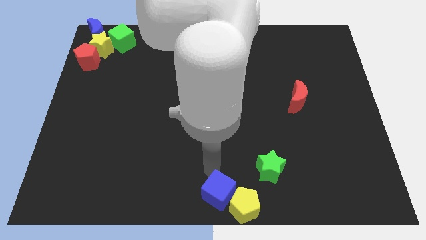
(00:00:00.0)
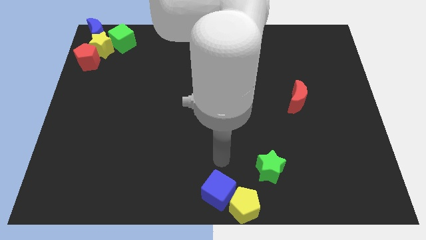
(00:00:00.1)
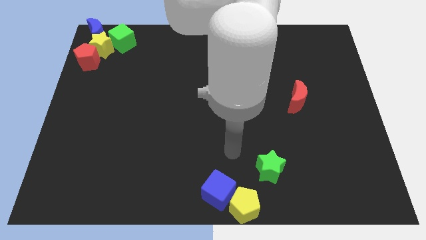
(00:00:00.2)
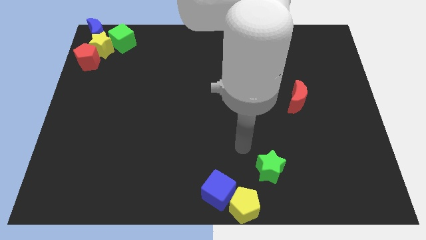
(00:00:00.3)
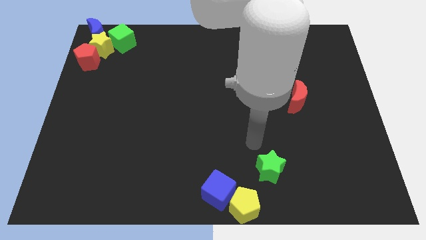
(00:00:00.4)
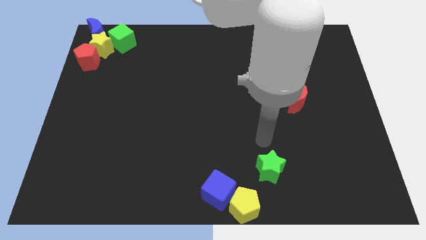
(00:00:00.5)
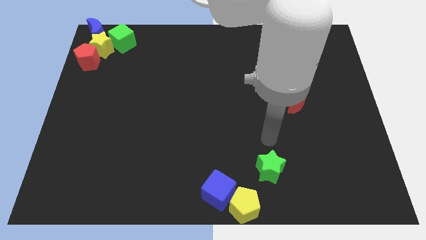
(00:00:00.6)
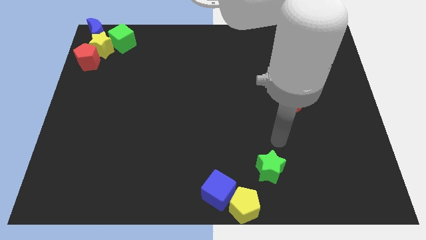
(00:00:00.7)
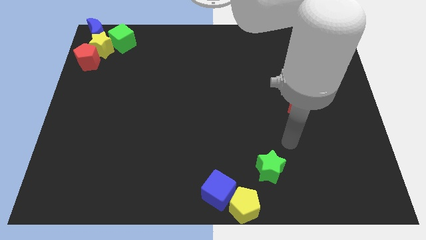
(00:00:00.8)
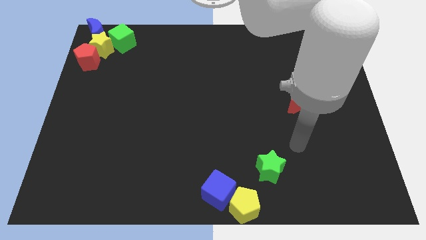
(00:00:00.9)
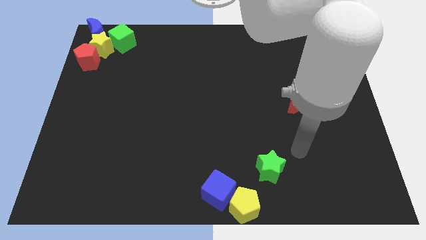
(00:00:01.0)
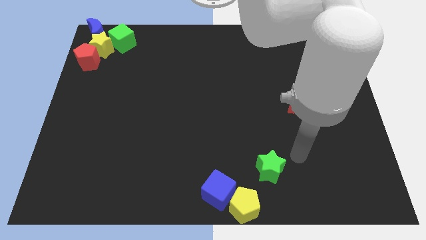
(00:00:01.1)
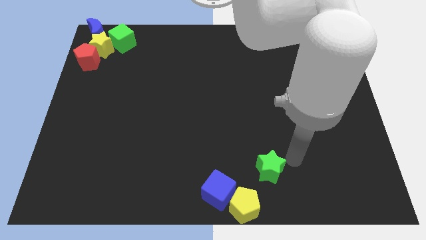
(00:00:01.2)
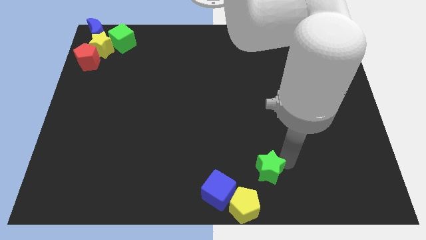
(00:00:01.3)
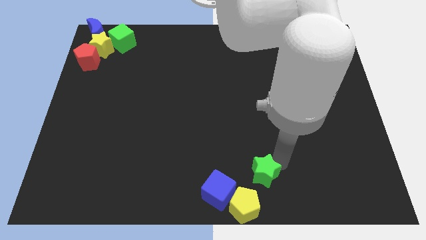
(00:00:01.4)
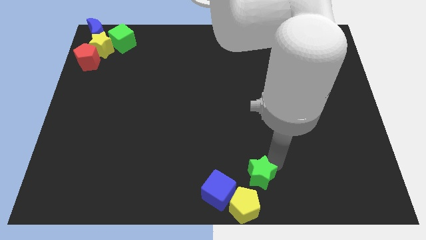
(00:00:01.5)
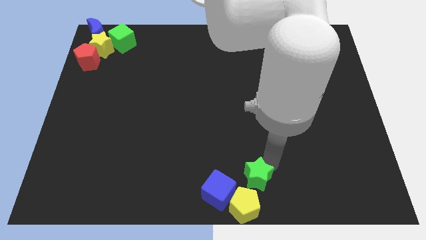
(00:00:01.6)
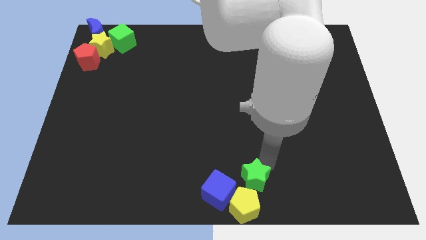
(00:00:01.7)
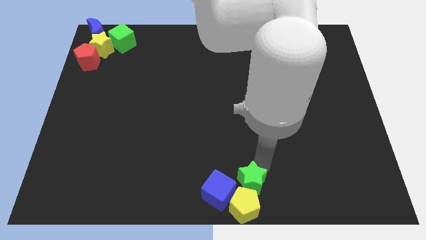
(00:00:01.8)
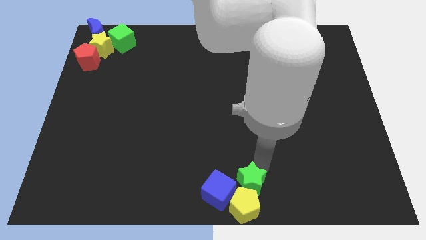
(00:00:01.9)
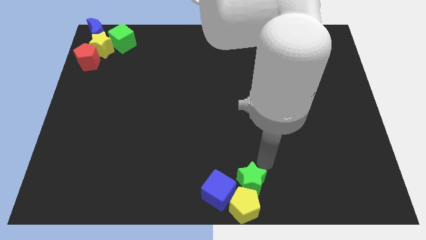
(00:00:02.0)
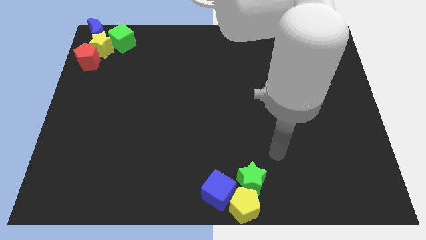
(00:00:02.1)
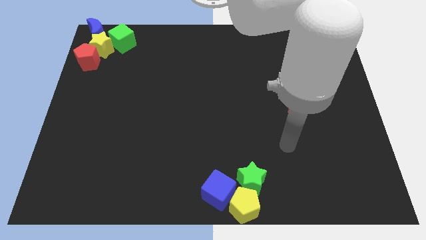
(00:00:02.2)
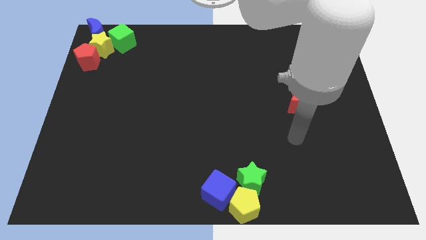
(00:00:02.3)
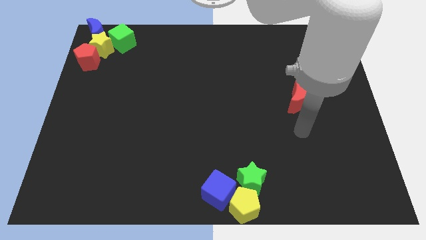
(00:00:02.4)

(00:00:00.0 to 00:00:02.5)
place the green star at the top of yellow pentagon

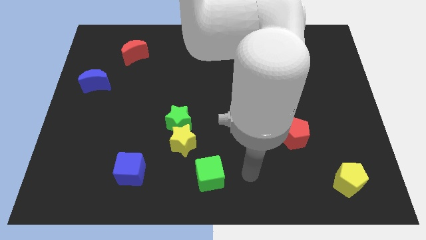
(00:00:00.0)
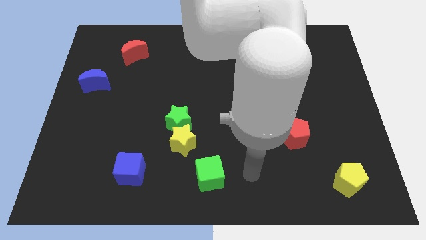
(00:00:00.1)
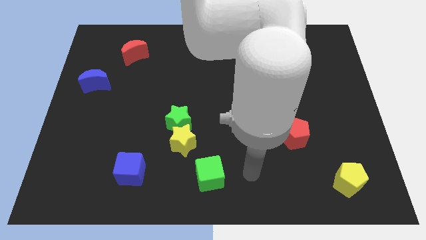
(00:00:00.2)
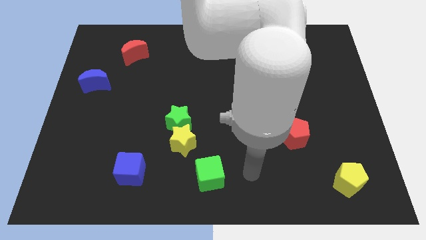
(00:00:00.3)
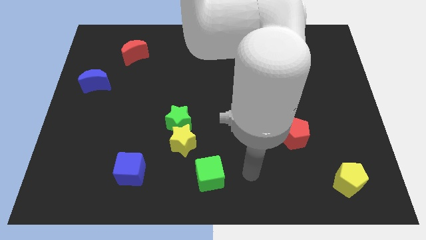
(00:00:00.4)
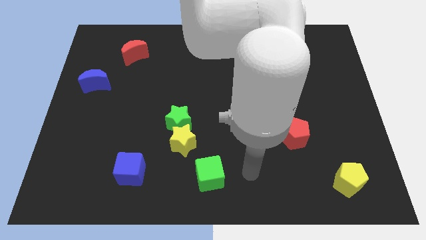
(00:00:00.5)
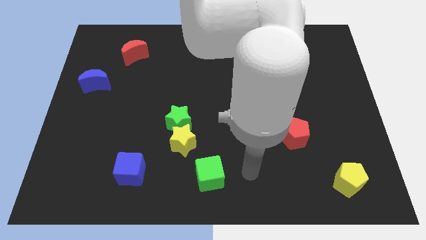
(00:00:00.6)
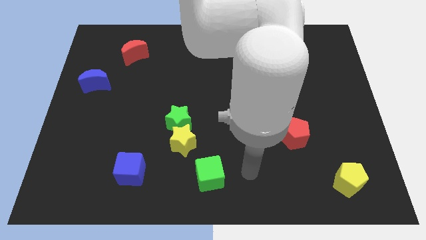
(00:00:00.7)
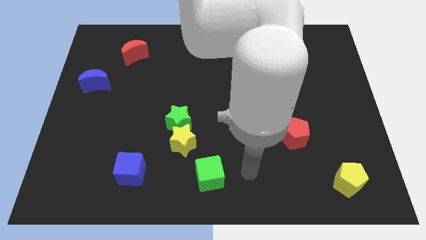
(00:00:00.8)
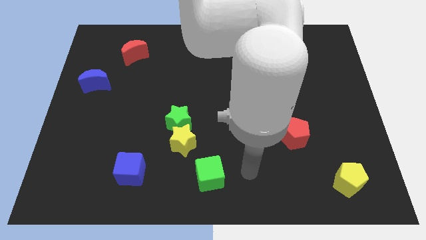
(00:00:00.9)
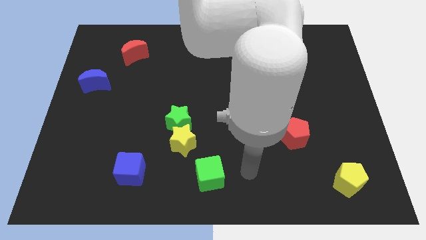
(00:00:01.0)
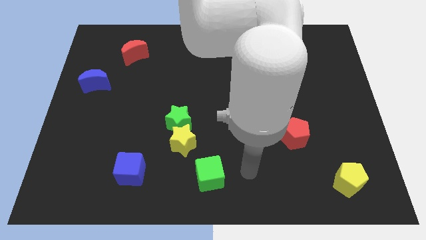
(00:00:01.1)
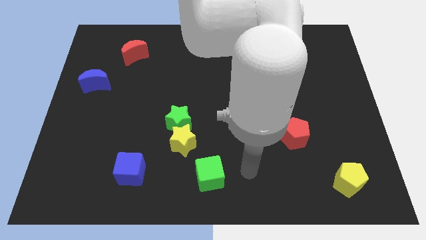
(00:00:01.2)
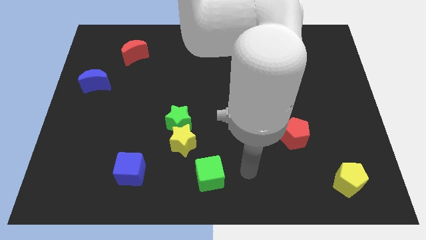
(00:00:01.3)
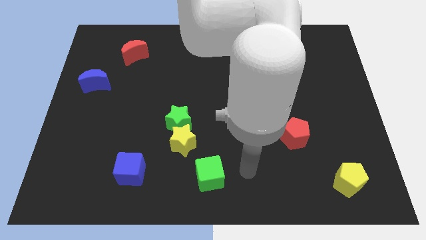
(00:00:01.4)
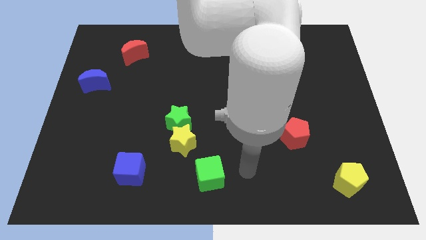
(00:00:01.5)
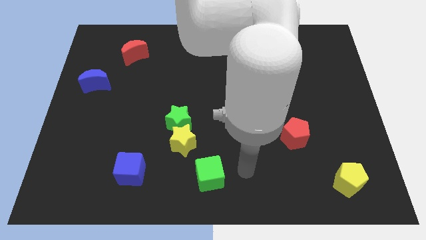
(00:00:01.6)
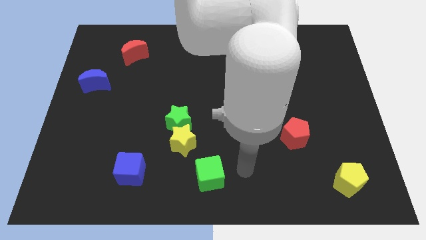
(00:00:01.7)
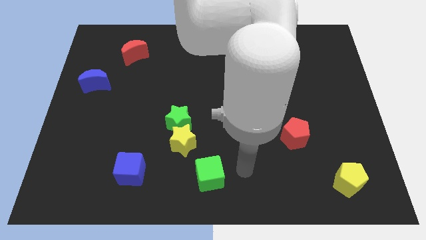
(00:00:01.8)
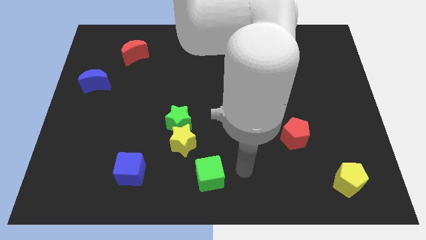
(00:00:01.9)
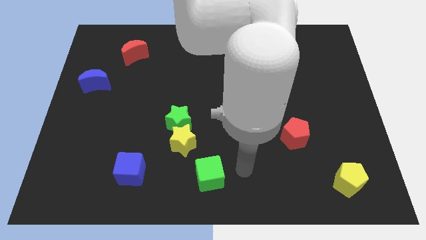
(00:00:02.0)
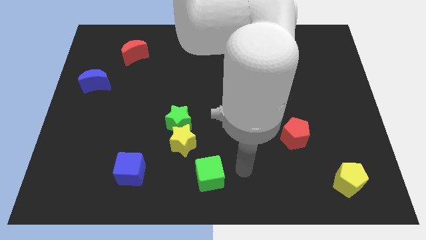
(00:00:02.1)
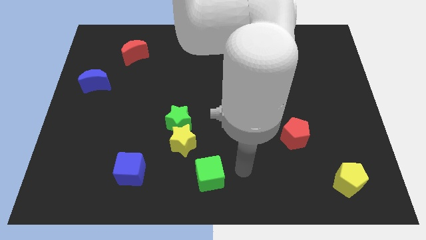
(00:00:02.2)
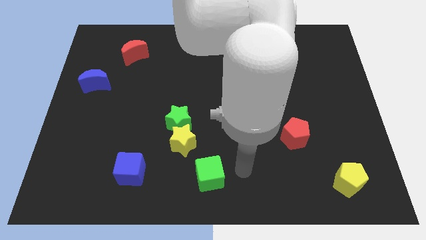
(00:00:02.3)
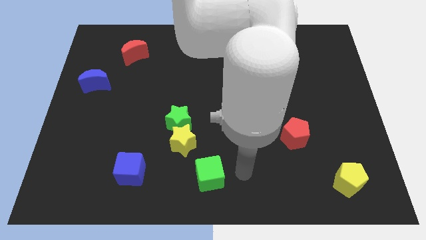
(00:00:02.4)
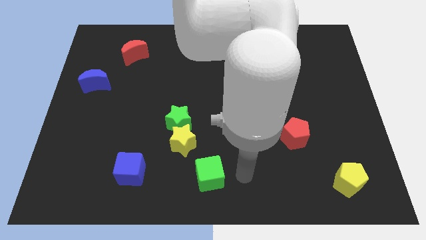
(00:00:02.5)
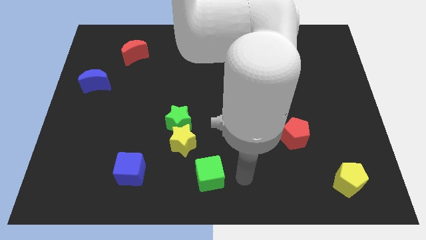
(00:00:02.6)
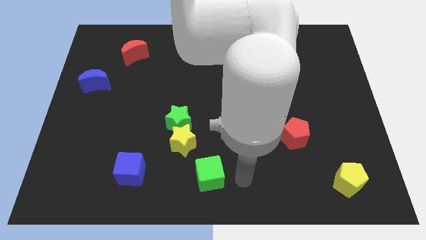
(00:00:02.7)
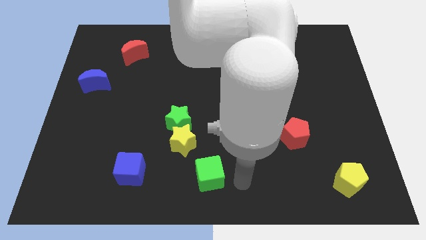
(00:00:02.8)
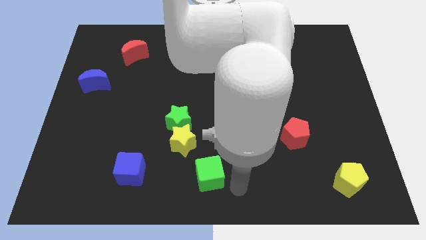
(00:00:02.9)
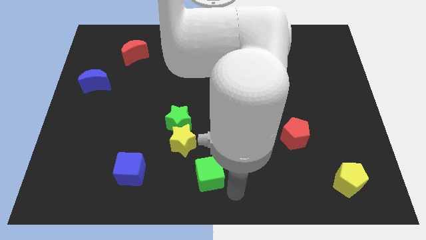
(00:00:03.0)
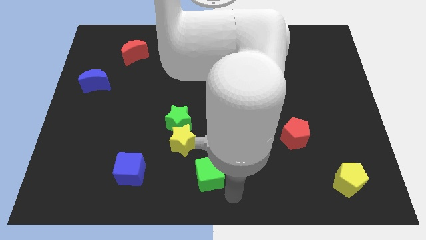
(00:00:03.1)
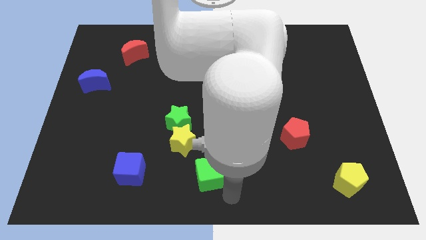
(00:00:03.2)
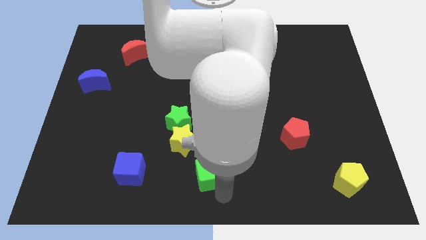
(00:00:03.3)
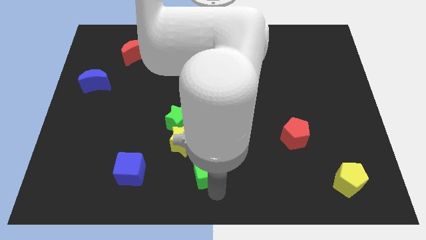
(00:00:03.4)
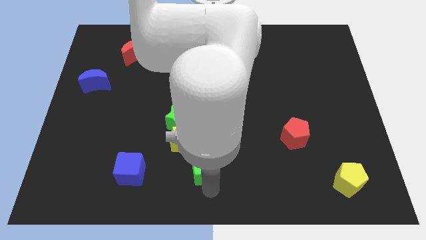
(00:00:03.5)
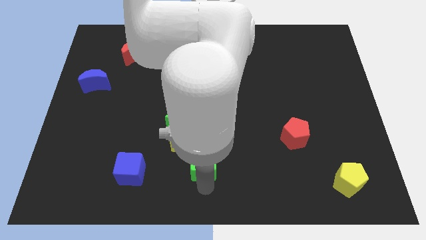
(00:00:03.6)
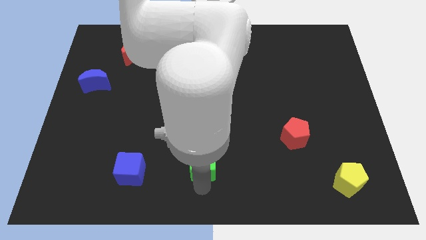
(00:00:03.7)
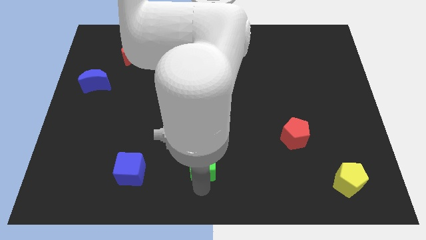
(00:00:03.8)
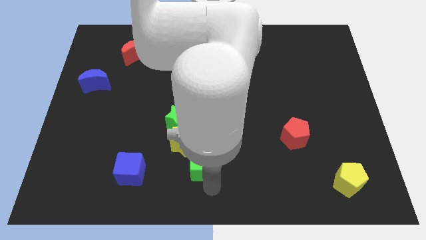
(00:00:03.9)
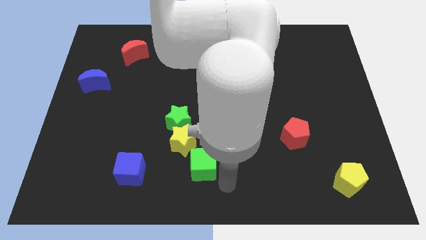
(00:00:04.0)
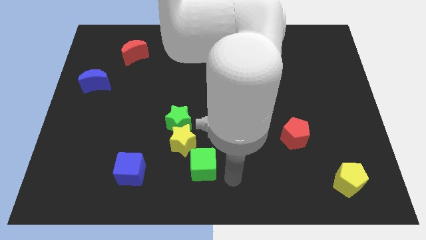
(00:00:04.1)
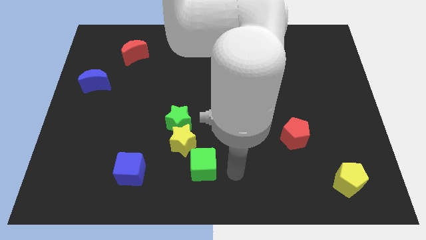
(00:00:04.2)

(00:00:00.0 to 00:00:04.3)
move the arm vertically below the green cube

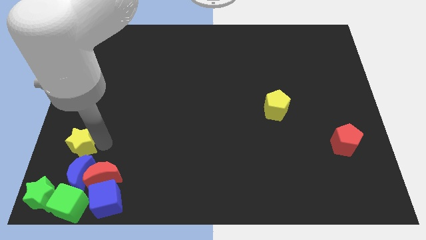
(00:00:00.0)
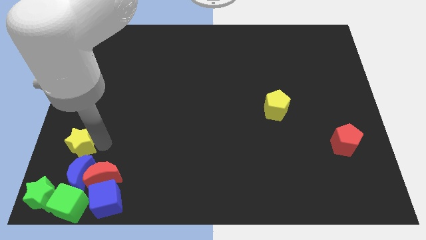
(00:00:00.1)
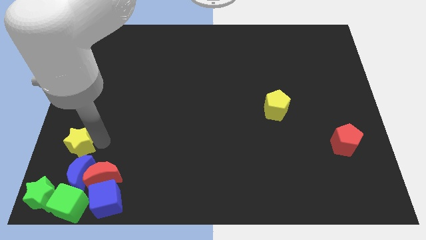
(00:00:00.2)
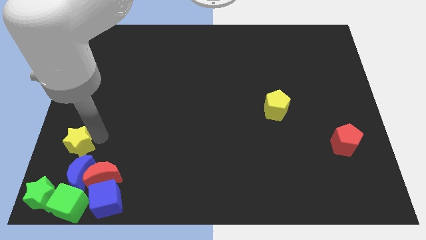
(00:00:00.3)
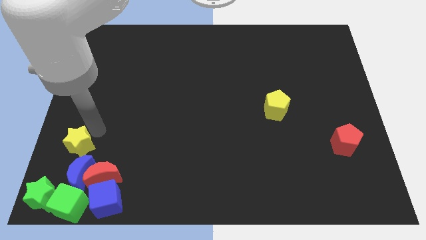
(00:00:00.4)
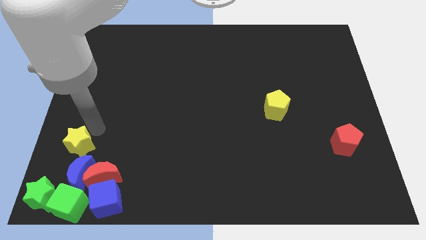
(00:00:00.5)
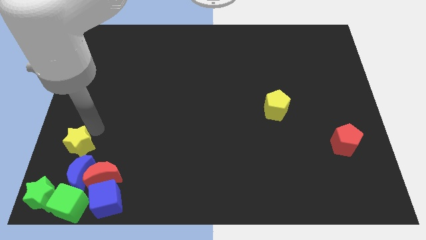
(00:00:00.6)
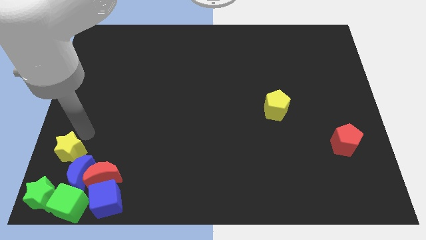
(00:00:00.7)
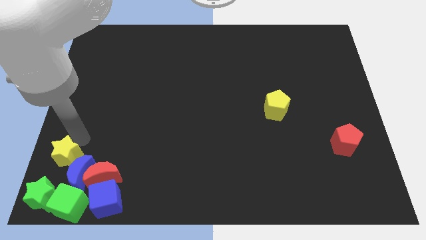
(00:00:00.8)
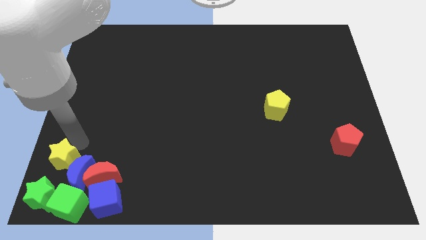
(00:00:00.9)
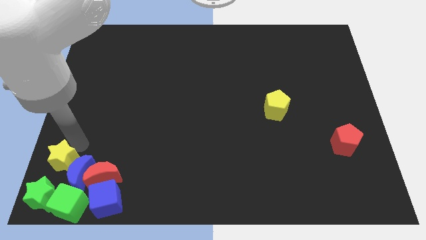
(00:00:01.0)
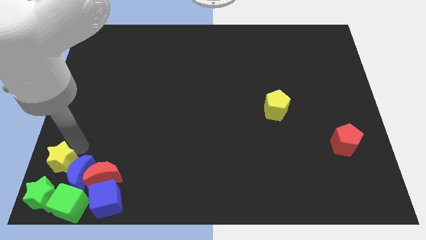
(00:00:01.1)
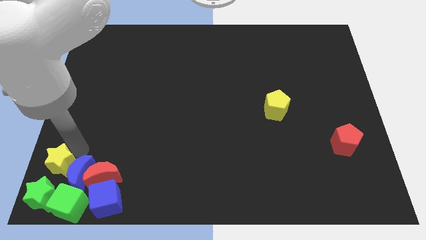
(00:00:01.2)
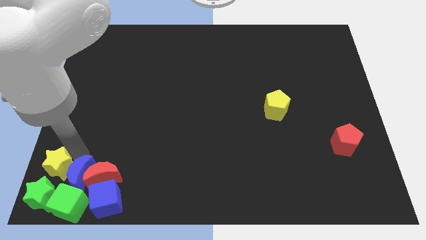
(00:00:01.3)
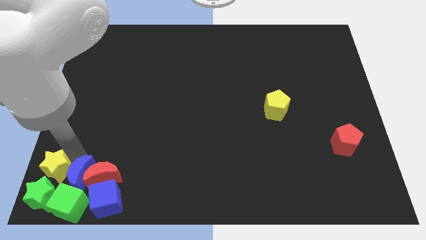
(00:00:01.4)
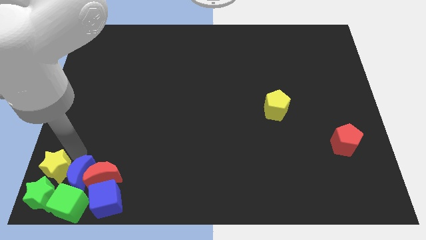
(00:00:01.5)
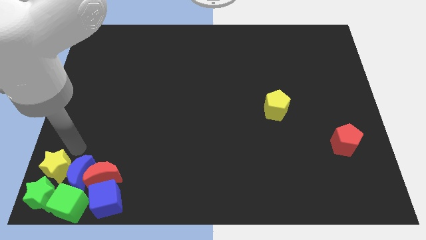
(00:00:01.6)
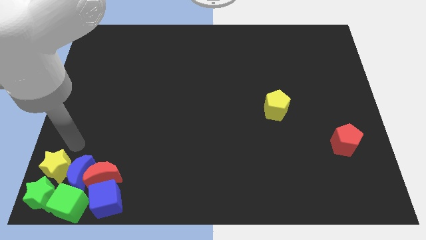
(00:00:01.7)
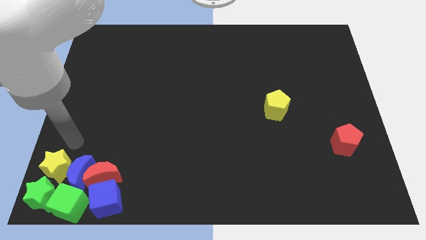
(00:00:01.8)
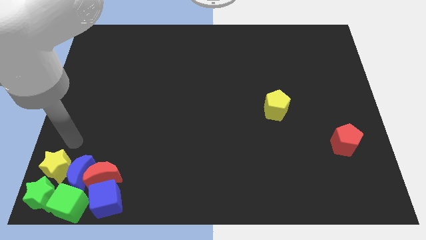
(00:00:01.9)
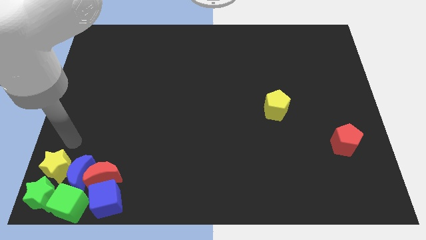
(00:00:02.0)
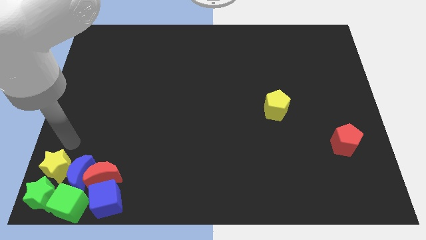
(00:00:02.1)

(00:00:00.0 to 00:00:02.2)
move the yellow star left to the blue moon
